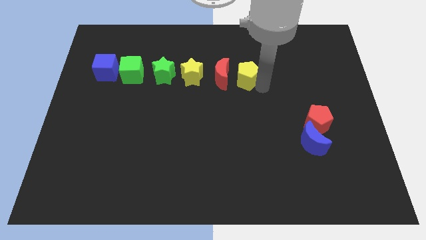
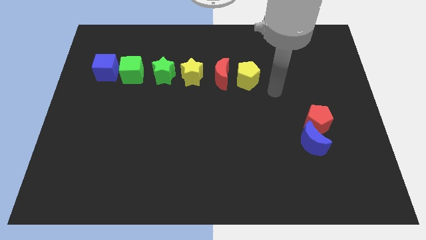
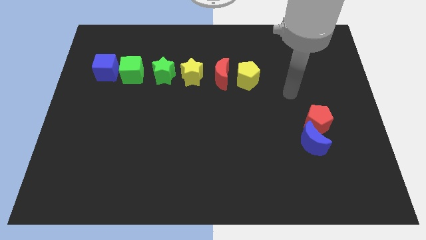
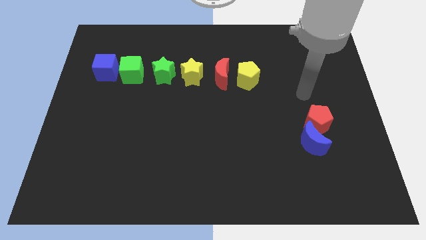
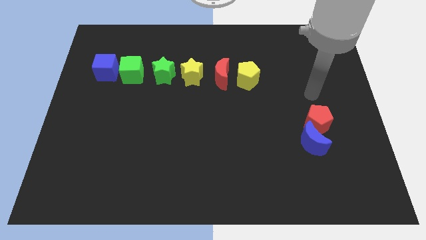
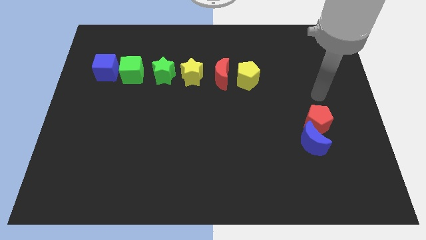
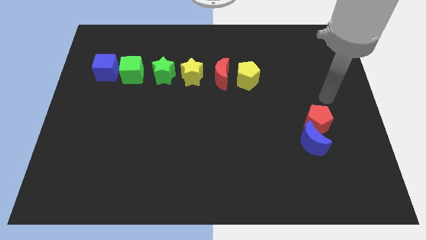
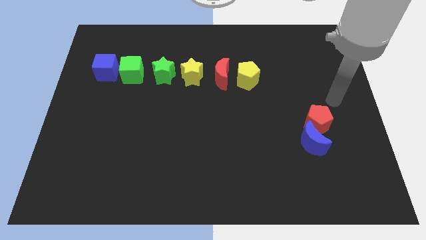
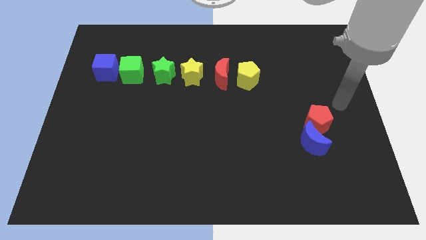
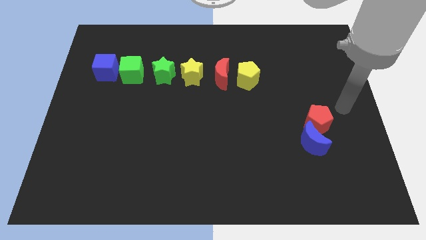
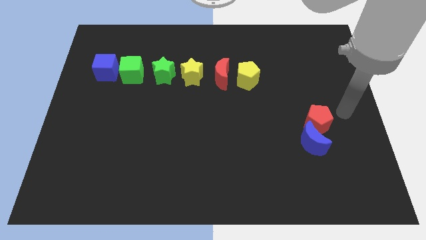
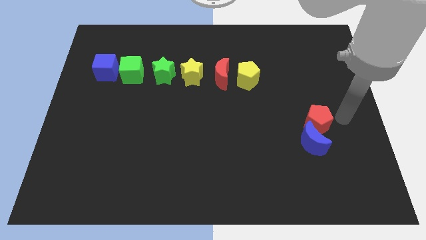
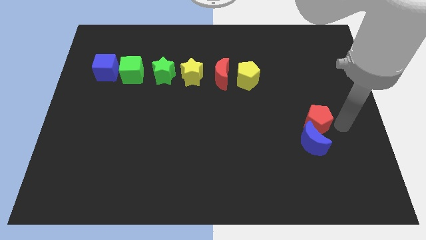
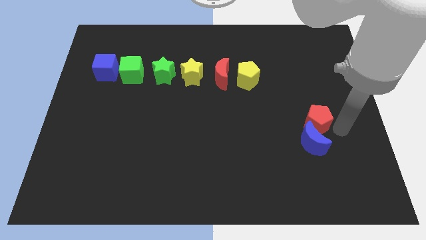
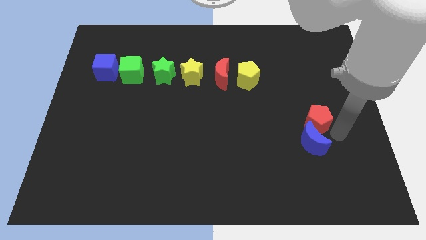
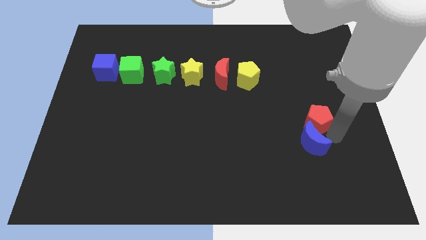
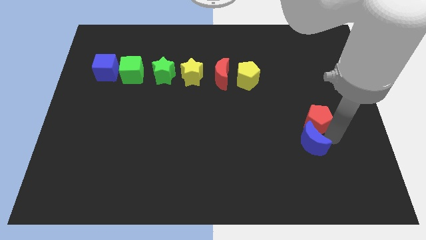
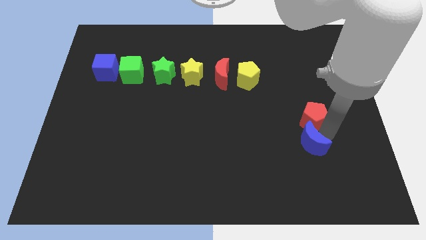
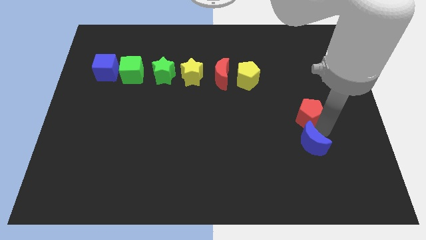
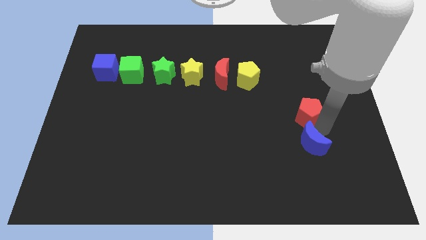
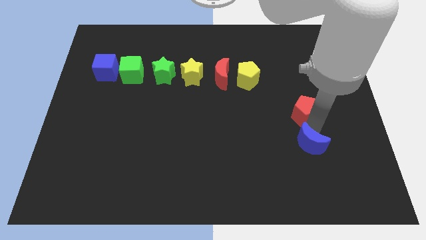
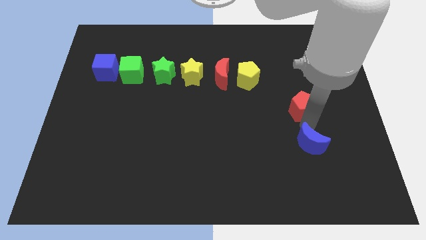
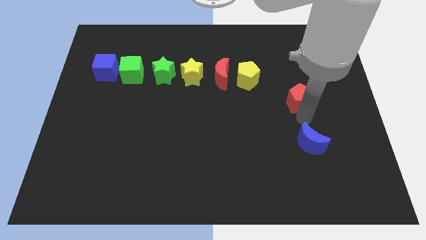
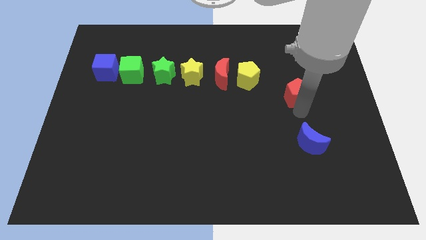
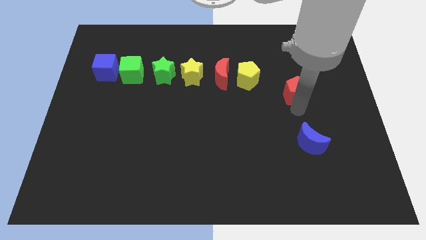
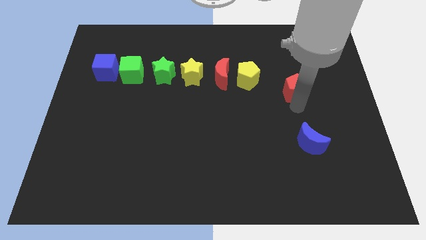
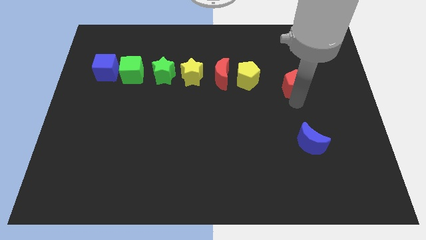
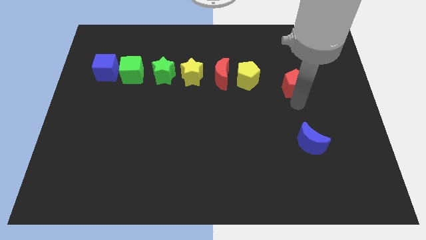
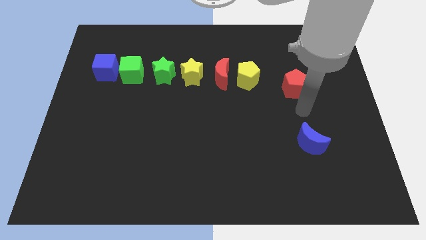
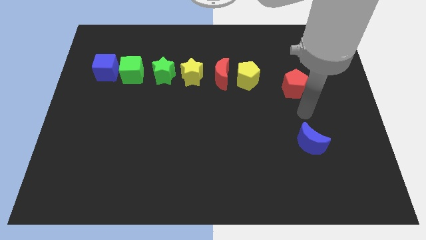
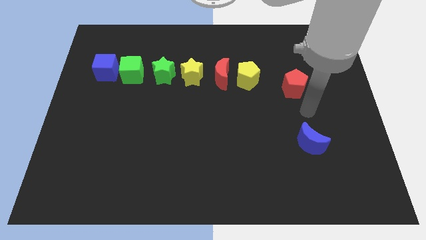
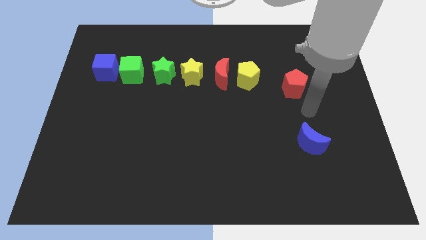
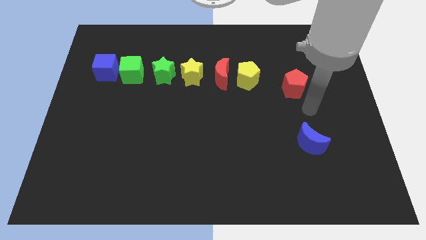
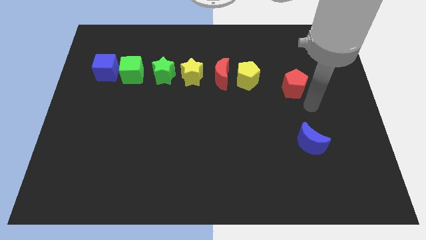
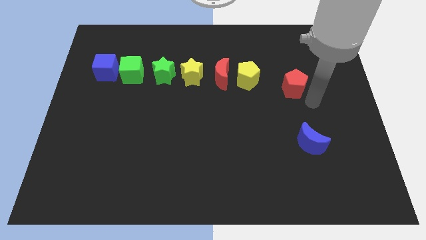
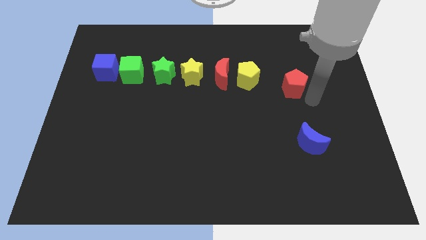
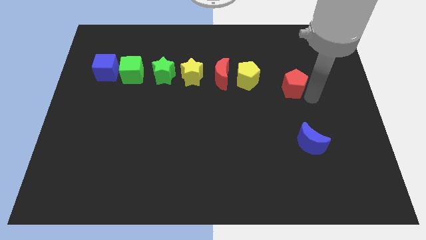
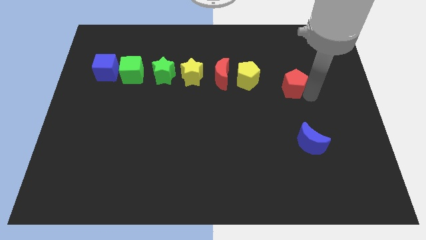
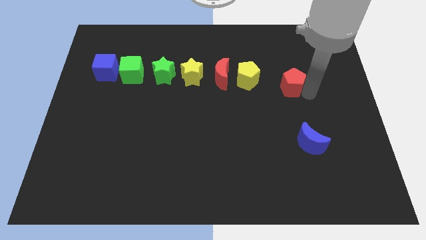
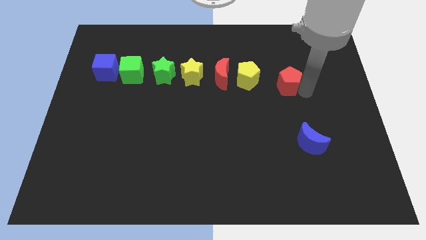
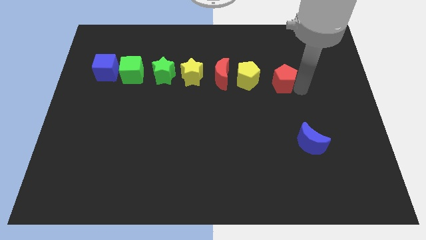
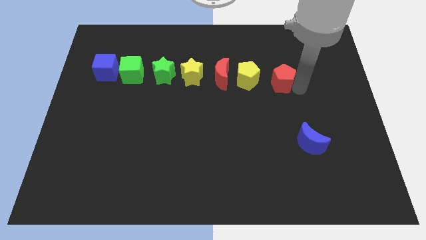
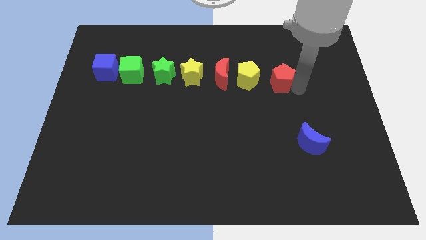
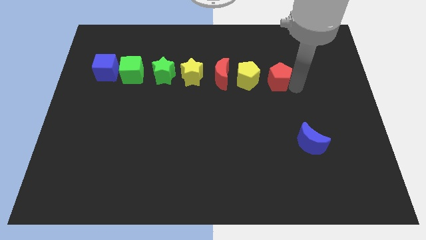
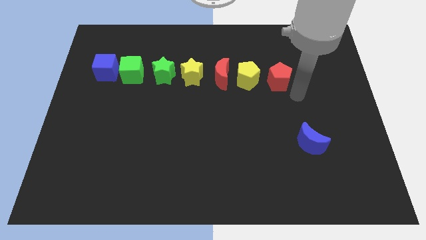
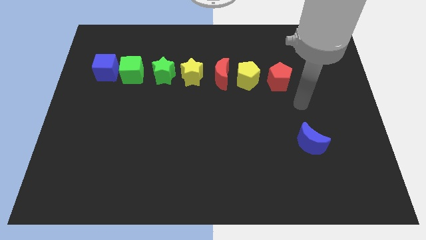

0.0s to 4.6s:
separate the red pentagon from the blue moon

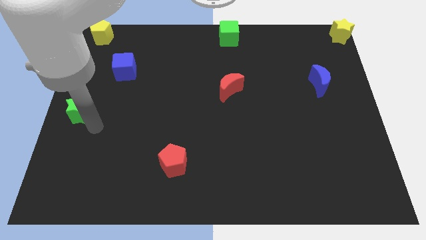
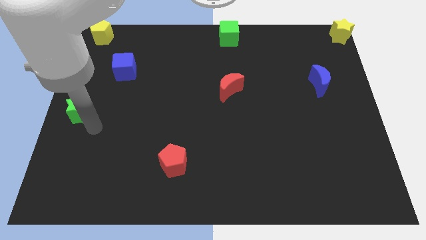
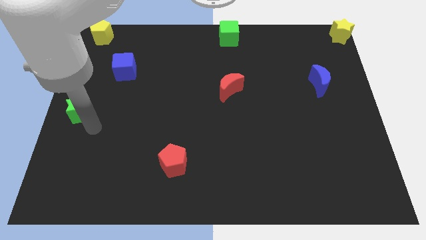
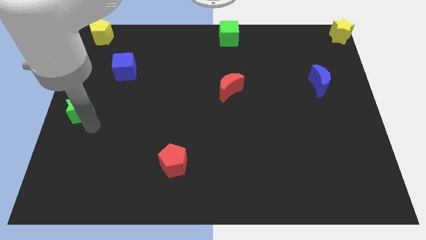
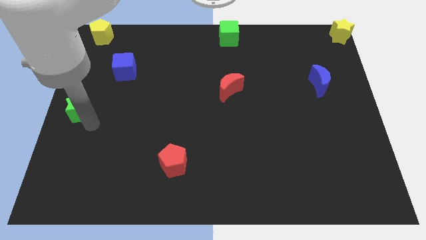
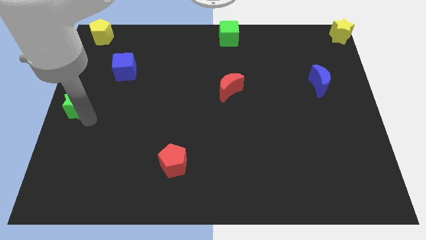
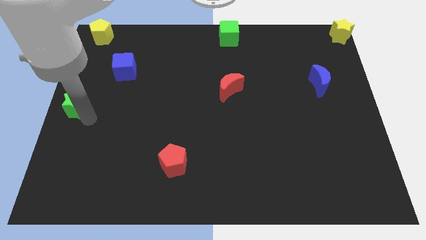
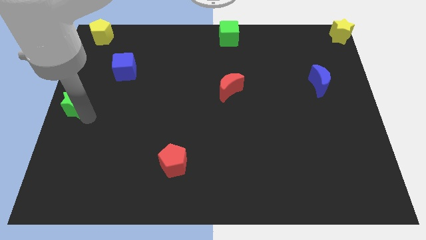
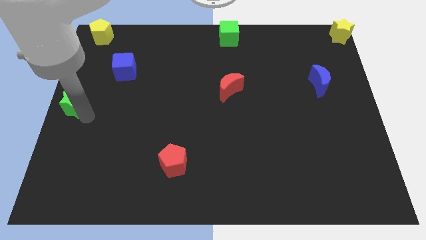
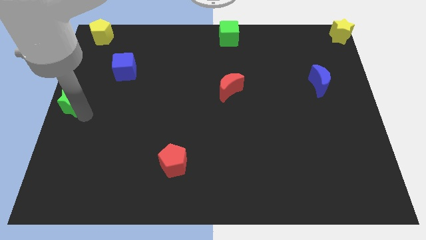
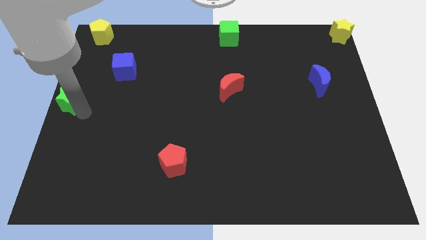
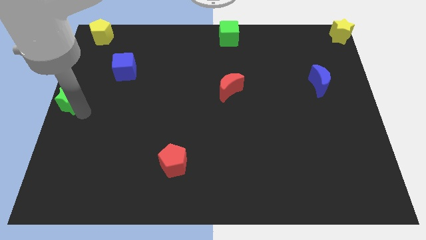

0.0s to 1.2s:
push the green star to the left center of the board

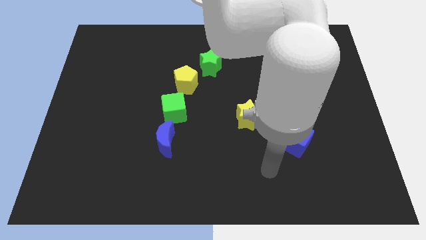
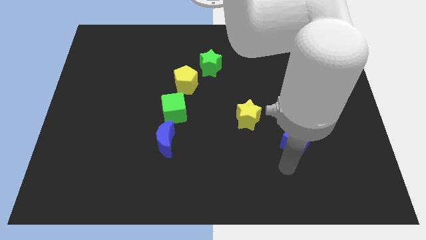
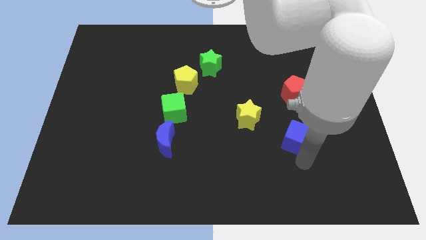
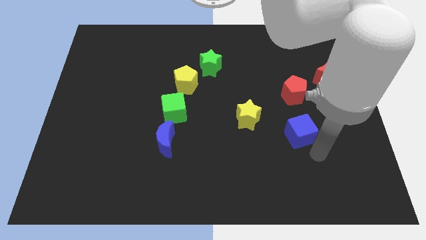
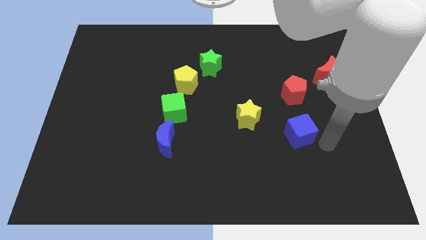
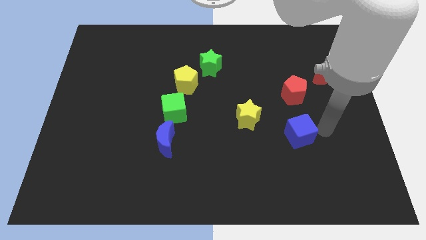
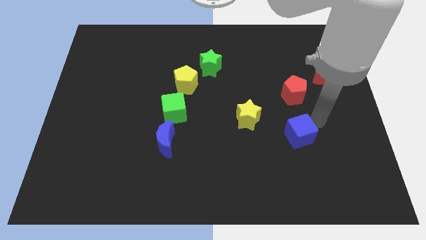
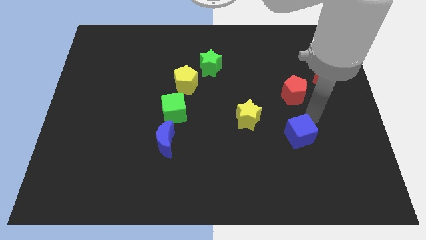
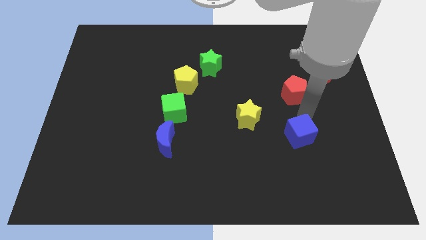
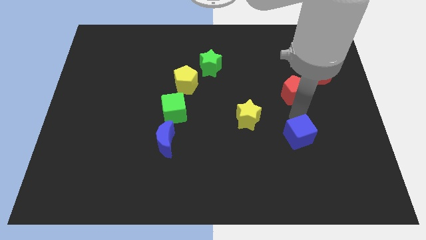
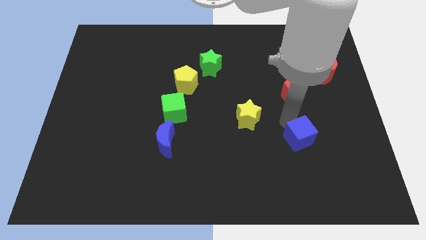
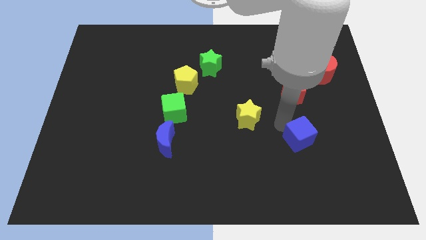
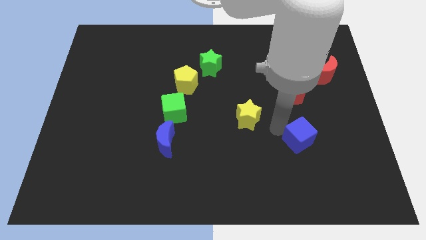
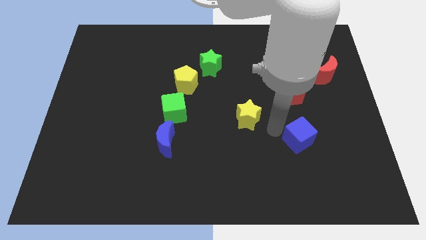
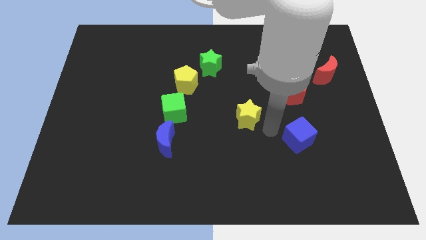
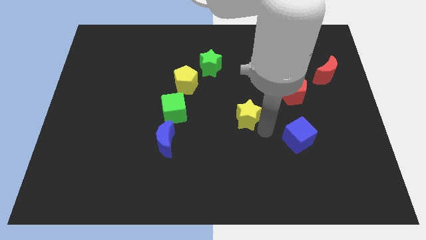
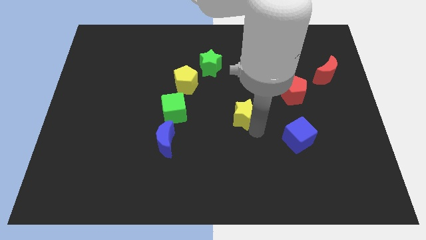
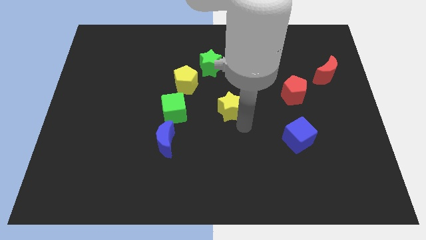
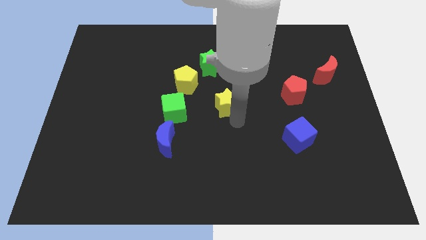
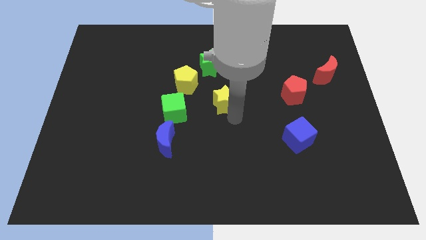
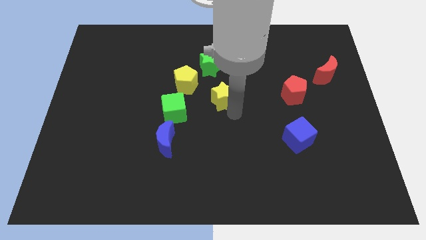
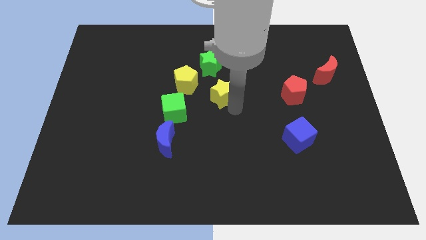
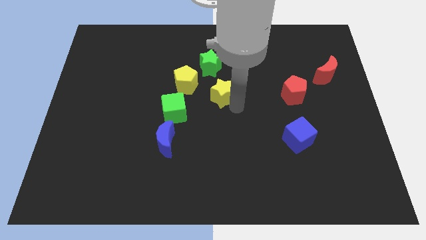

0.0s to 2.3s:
push the yellow star towards the yellow pentagon

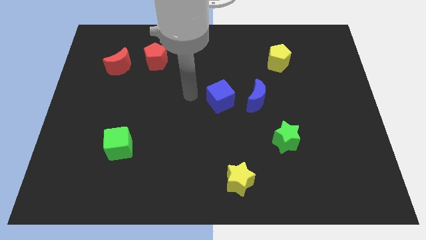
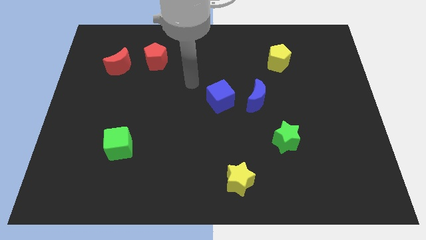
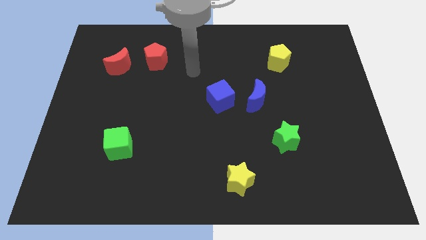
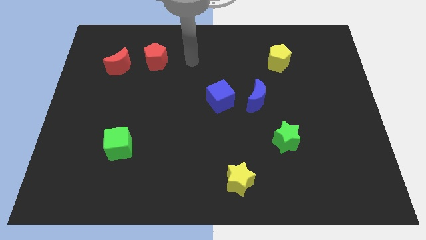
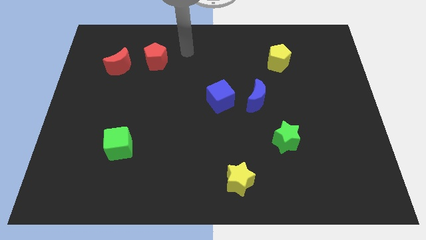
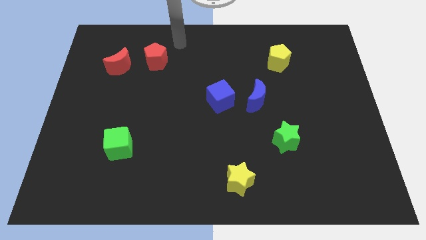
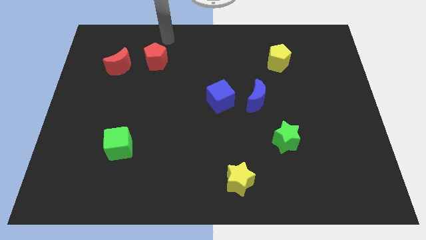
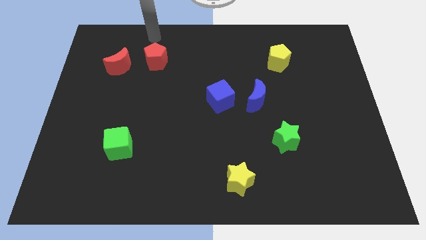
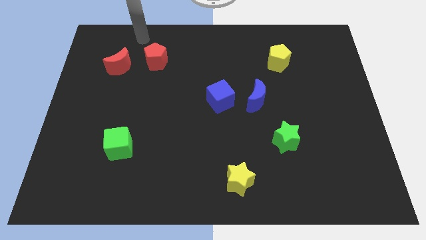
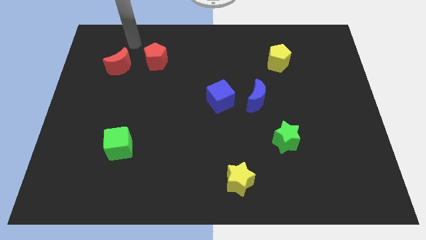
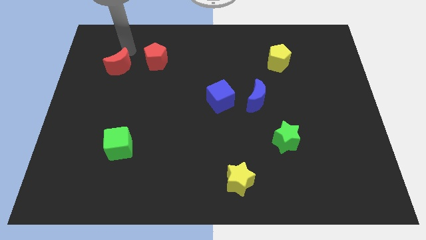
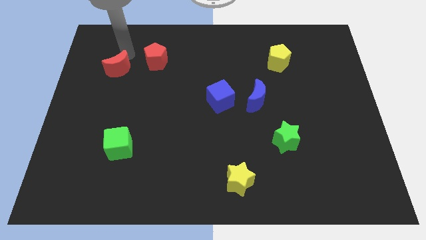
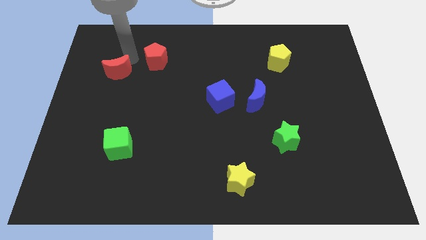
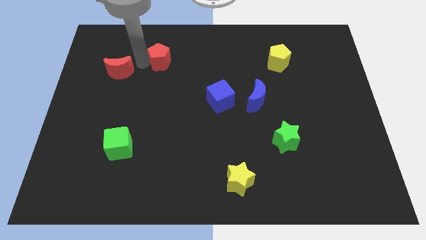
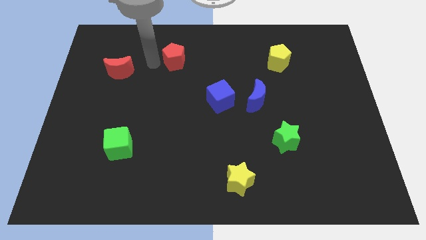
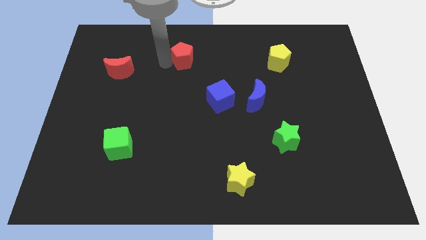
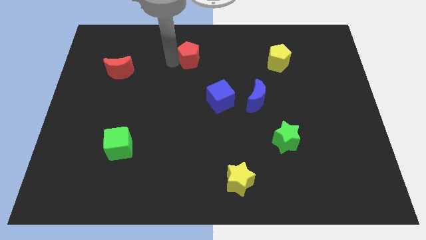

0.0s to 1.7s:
slightly move red blocks in opposite directions
